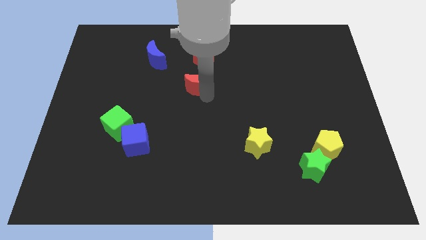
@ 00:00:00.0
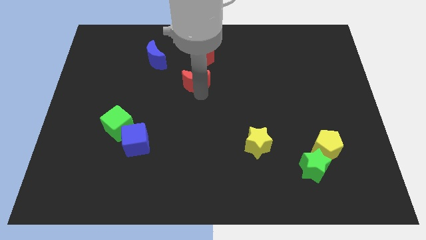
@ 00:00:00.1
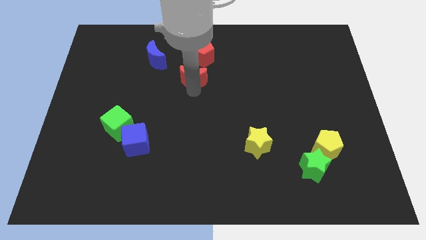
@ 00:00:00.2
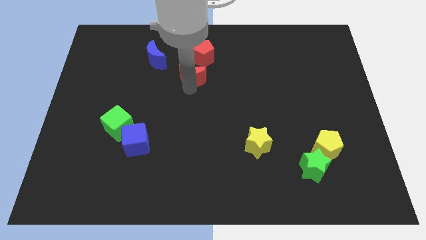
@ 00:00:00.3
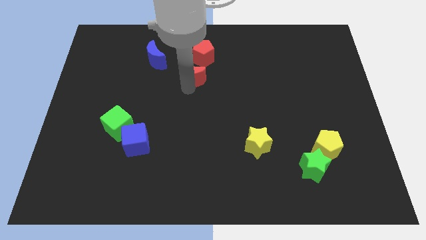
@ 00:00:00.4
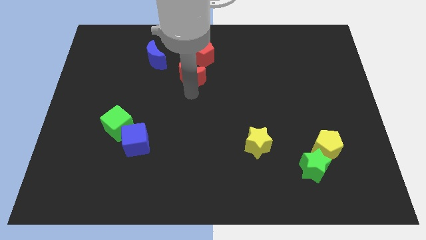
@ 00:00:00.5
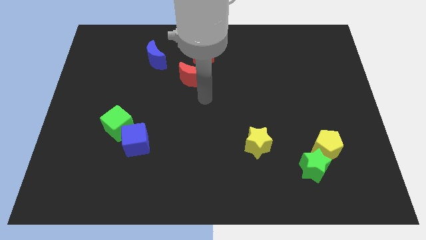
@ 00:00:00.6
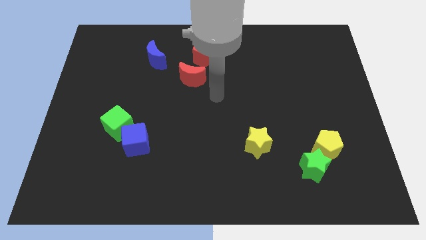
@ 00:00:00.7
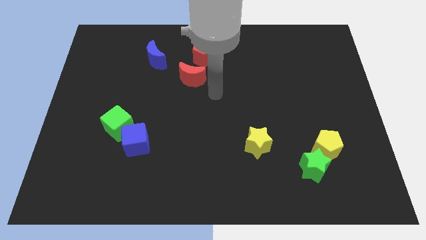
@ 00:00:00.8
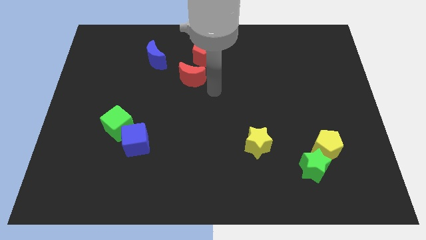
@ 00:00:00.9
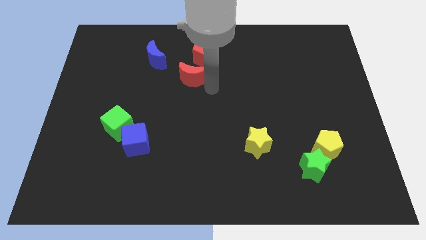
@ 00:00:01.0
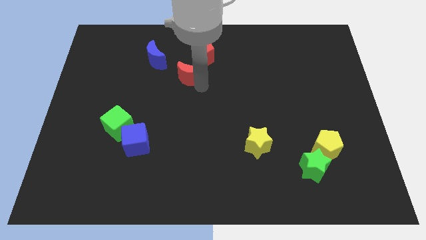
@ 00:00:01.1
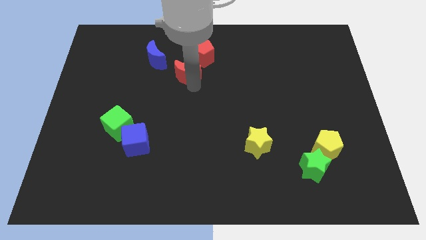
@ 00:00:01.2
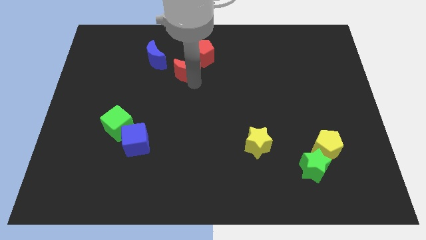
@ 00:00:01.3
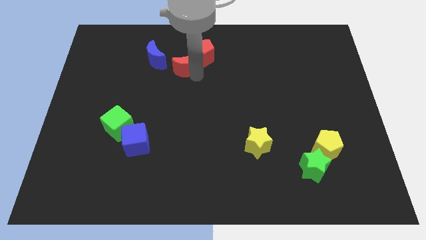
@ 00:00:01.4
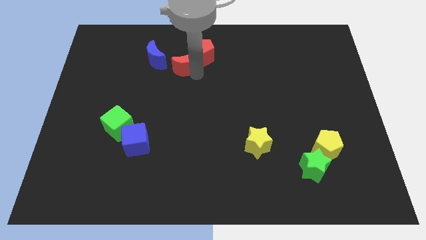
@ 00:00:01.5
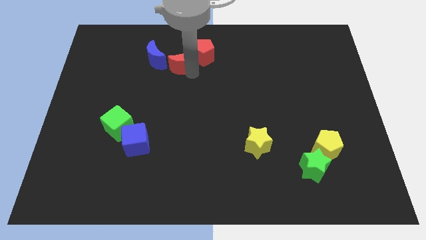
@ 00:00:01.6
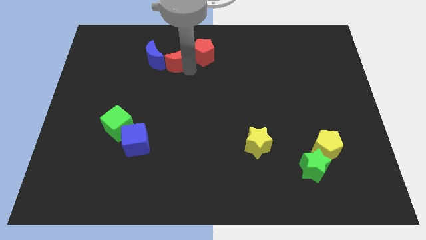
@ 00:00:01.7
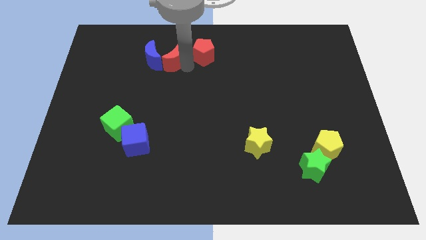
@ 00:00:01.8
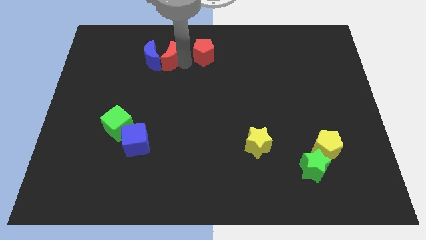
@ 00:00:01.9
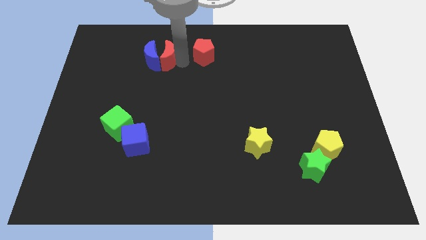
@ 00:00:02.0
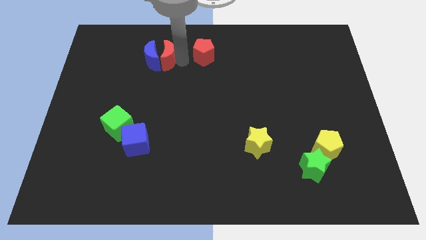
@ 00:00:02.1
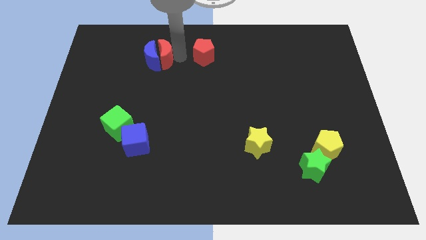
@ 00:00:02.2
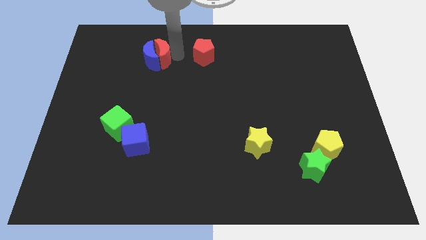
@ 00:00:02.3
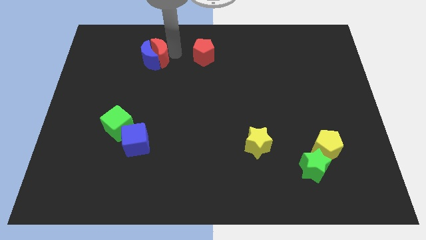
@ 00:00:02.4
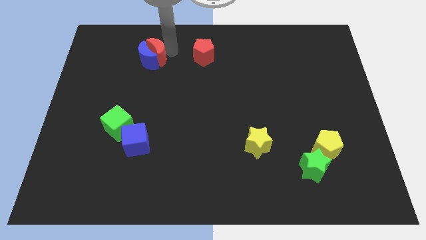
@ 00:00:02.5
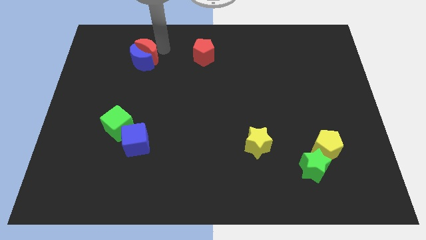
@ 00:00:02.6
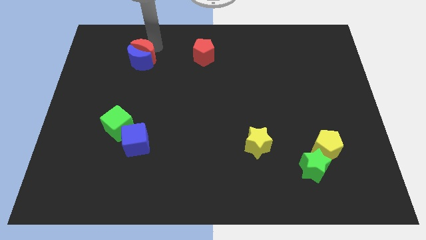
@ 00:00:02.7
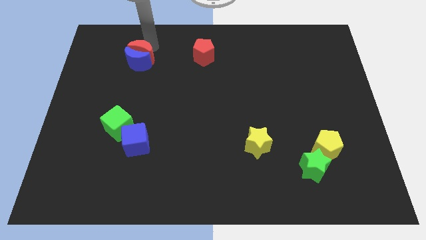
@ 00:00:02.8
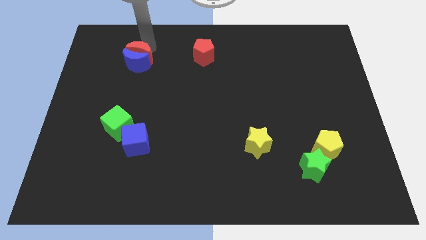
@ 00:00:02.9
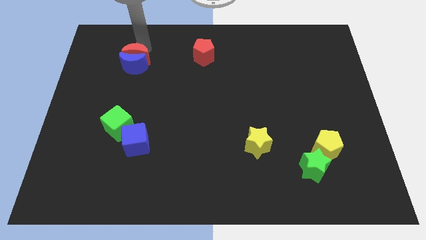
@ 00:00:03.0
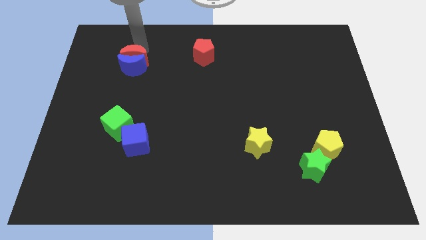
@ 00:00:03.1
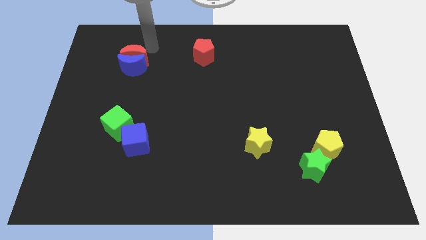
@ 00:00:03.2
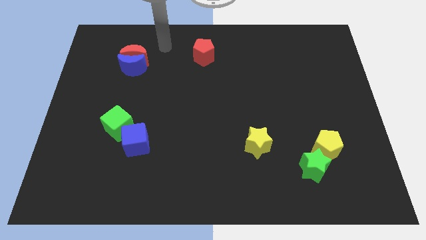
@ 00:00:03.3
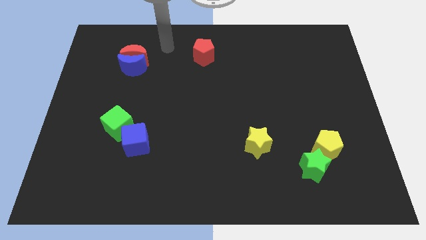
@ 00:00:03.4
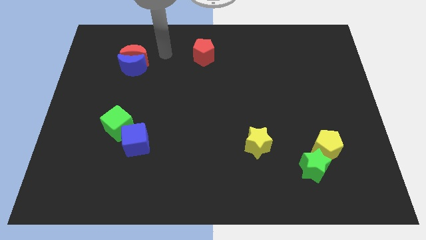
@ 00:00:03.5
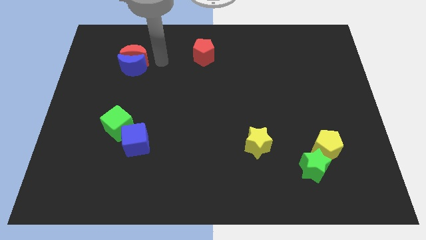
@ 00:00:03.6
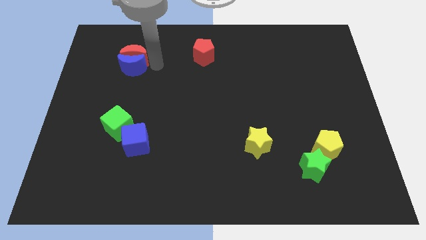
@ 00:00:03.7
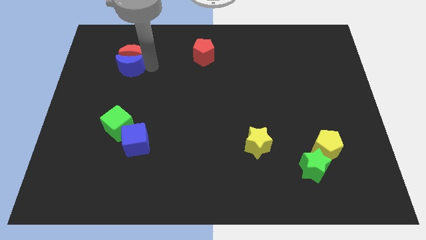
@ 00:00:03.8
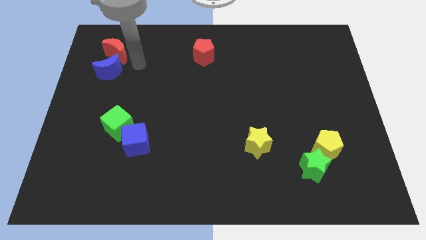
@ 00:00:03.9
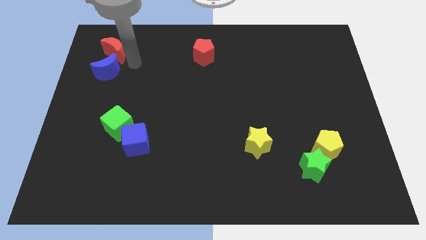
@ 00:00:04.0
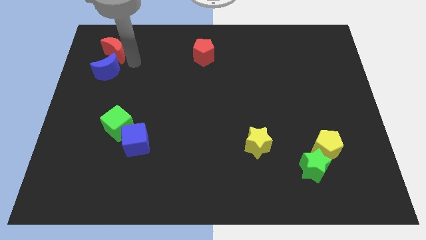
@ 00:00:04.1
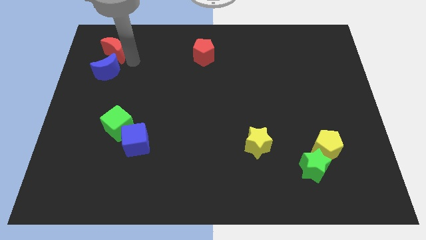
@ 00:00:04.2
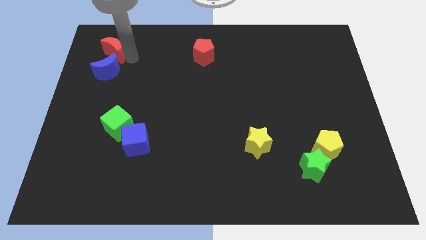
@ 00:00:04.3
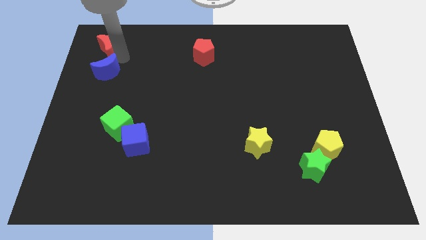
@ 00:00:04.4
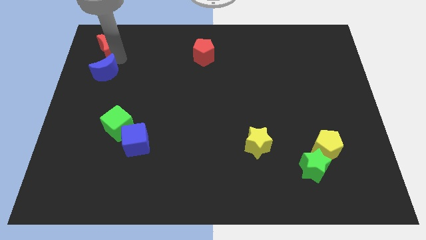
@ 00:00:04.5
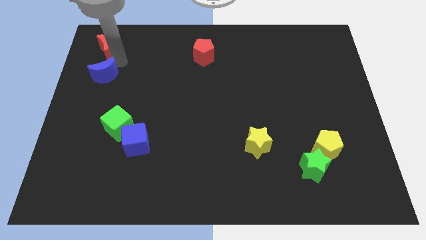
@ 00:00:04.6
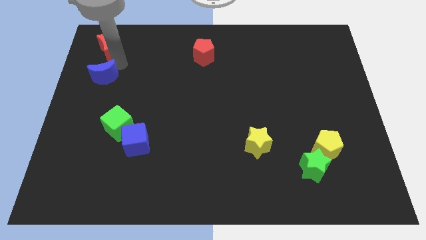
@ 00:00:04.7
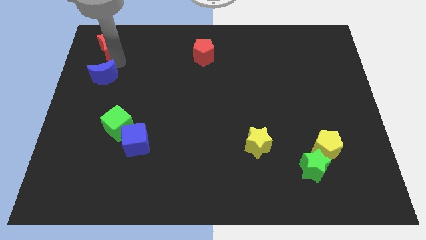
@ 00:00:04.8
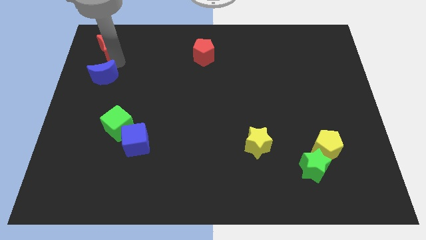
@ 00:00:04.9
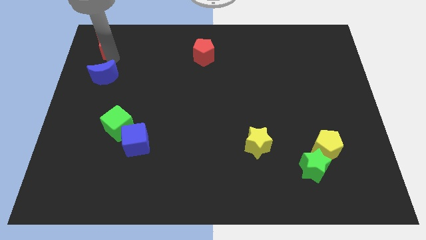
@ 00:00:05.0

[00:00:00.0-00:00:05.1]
push the red crescent above the blue crescent

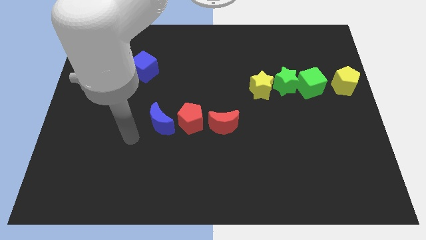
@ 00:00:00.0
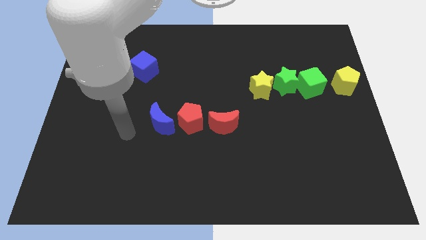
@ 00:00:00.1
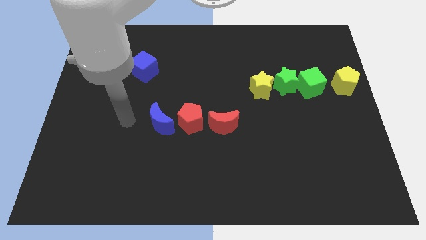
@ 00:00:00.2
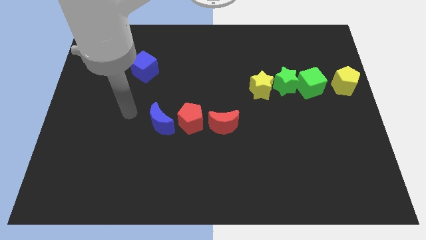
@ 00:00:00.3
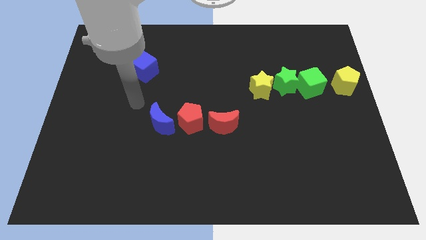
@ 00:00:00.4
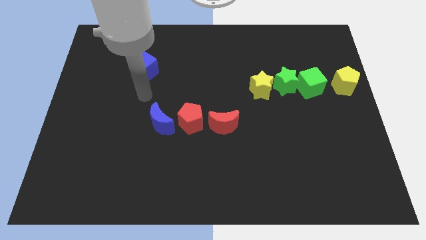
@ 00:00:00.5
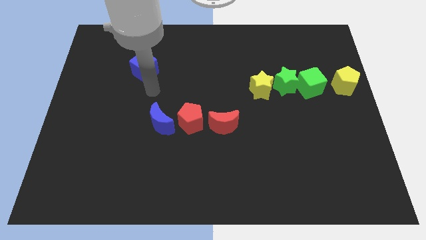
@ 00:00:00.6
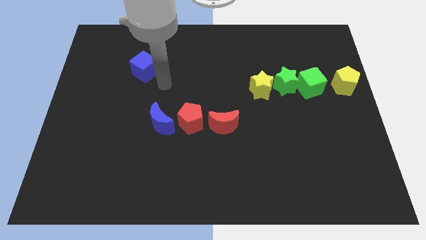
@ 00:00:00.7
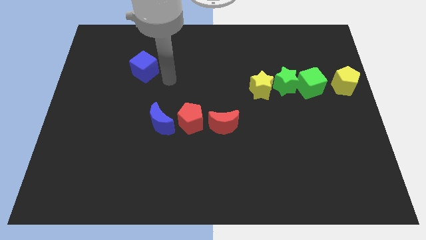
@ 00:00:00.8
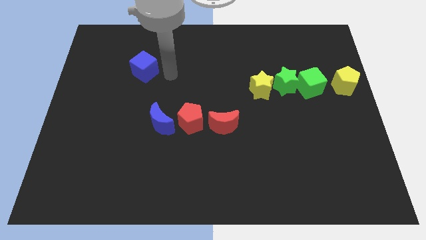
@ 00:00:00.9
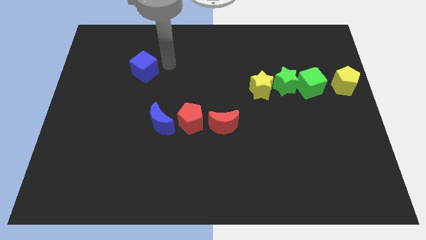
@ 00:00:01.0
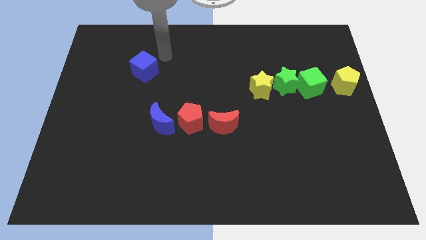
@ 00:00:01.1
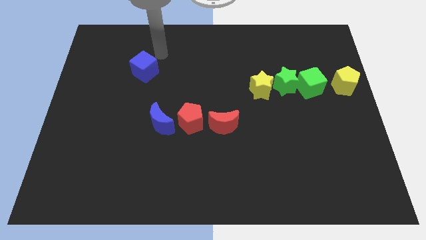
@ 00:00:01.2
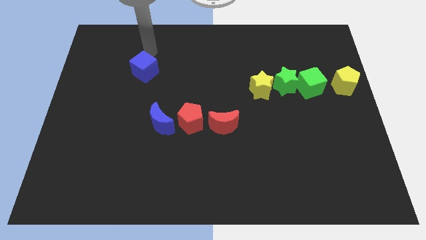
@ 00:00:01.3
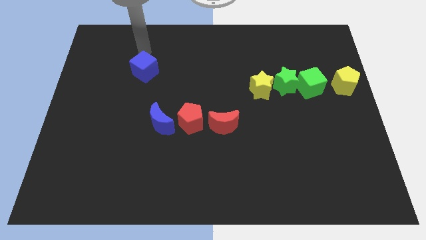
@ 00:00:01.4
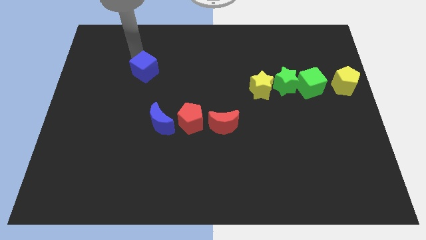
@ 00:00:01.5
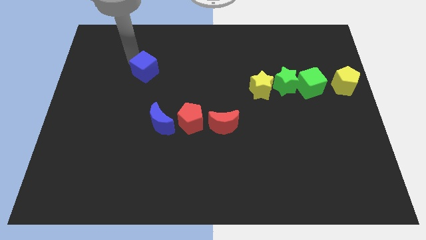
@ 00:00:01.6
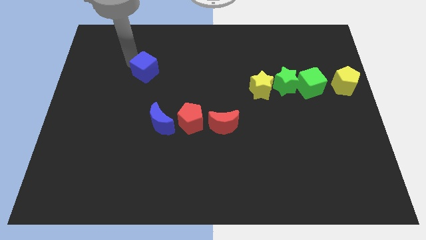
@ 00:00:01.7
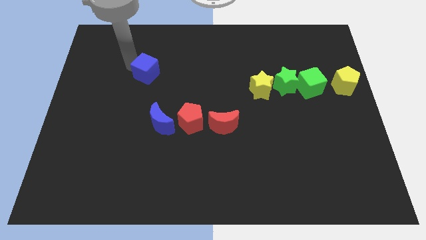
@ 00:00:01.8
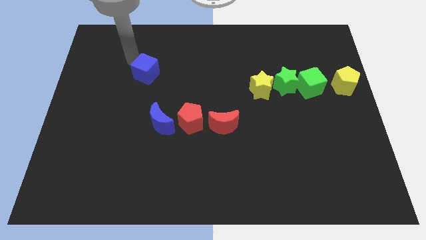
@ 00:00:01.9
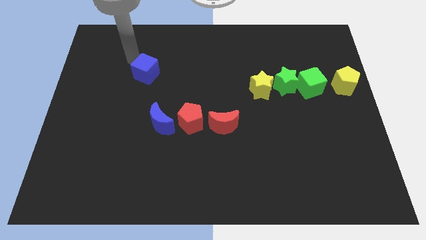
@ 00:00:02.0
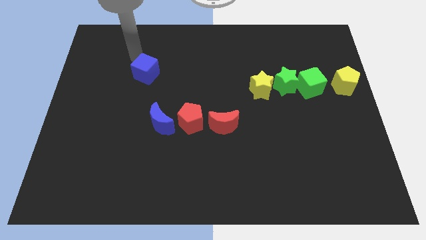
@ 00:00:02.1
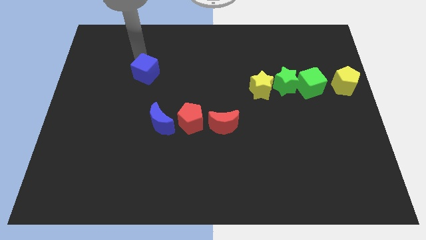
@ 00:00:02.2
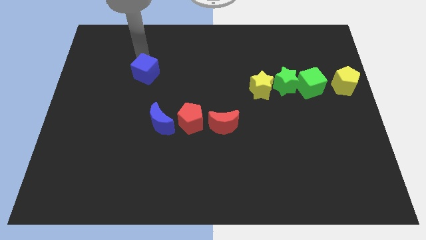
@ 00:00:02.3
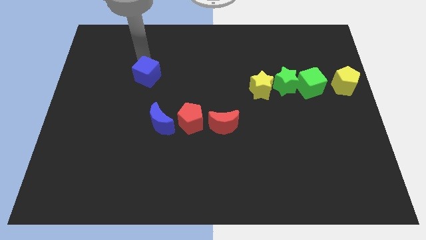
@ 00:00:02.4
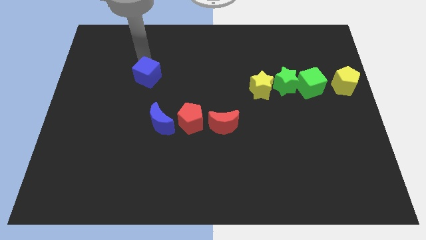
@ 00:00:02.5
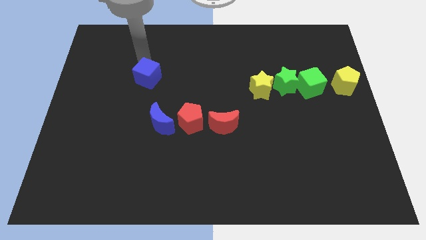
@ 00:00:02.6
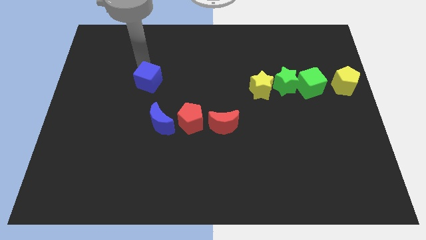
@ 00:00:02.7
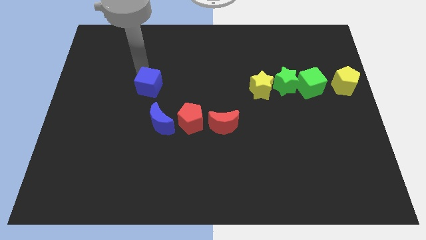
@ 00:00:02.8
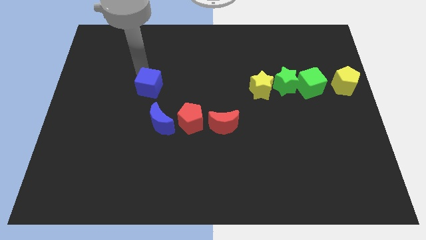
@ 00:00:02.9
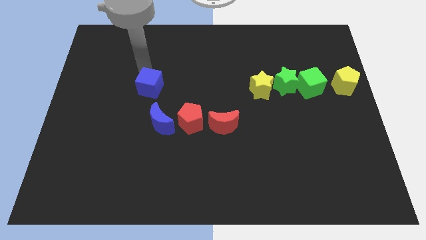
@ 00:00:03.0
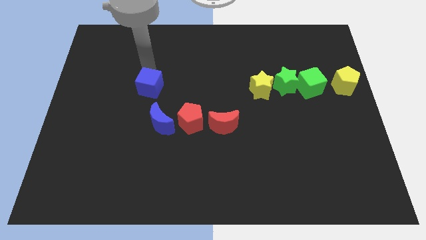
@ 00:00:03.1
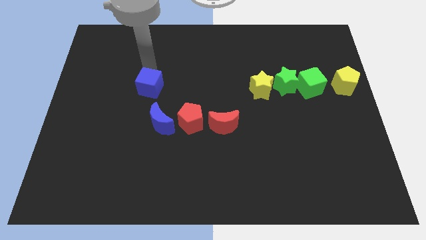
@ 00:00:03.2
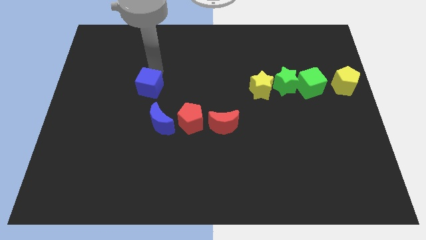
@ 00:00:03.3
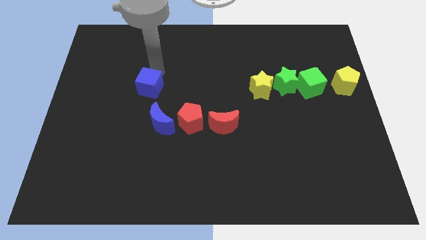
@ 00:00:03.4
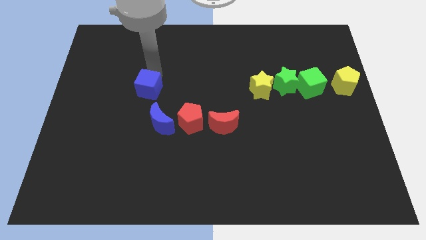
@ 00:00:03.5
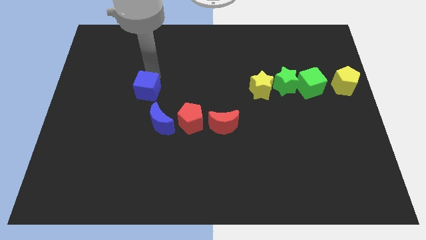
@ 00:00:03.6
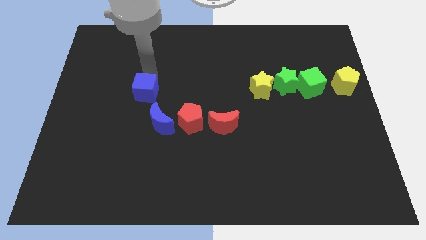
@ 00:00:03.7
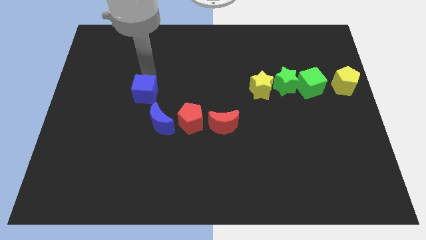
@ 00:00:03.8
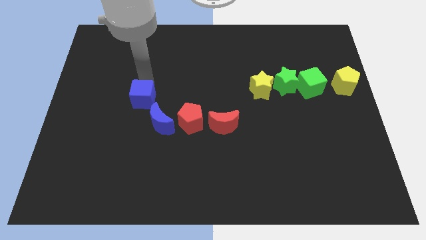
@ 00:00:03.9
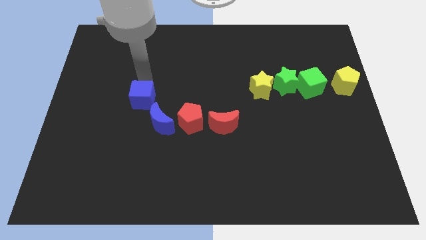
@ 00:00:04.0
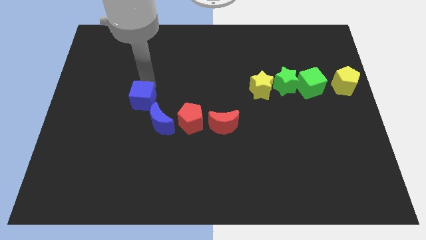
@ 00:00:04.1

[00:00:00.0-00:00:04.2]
push the blue cube near the blue moon
